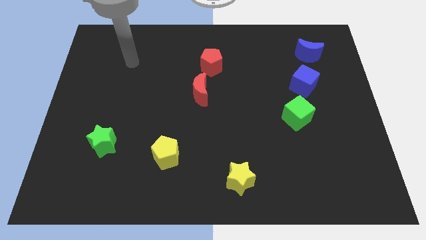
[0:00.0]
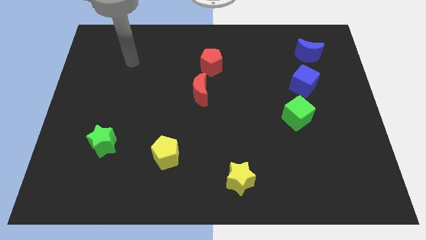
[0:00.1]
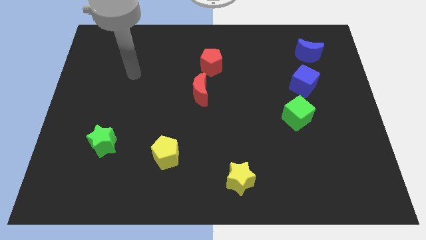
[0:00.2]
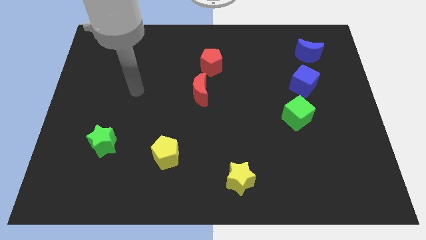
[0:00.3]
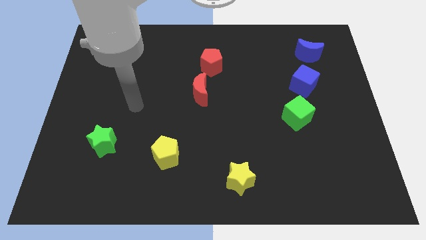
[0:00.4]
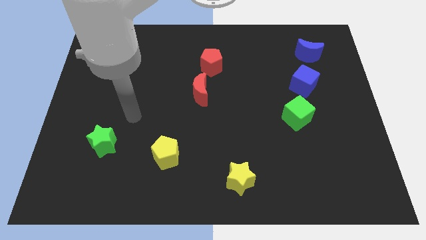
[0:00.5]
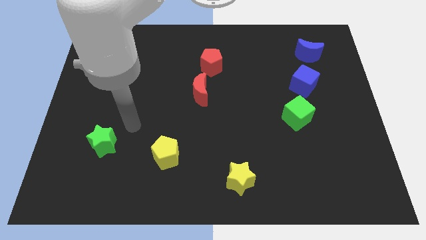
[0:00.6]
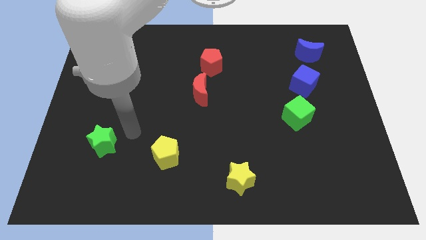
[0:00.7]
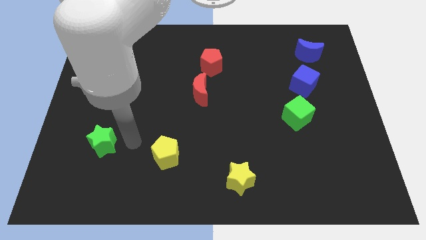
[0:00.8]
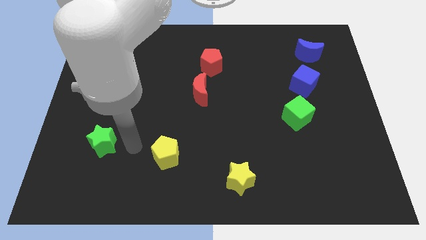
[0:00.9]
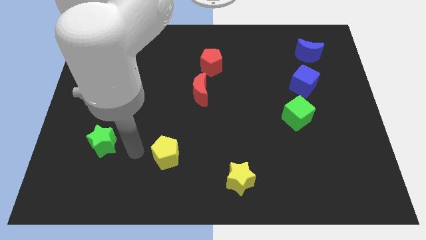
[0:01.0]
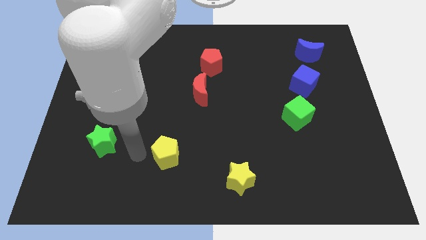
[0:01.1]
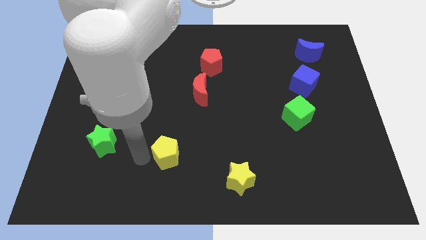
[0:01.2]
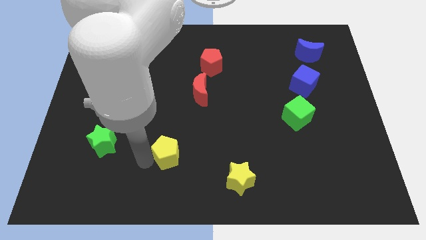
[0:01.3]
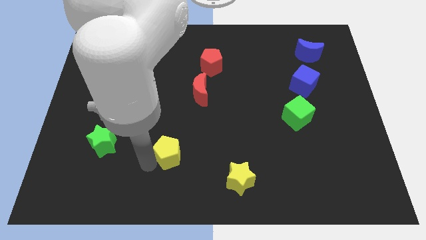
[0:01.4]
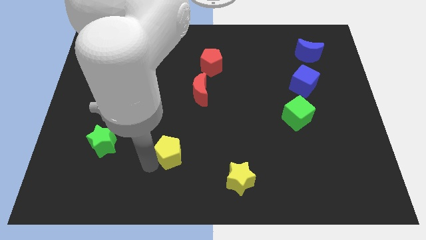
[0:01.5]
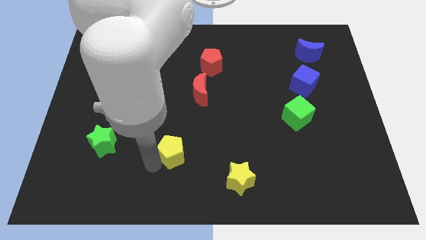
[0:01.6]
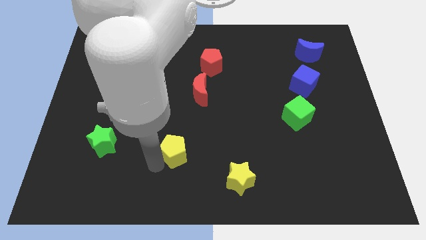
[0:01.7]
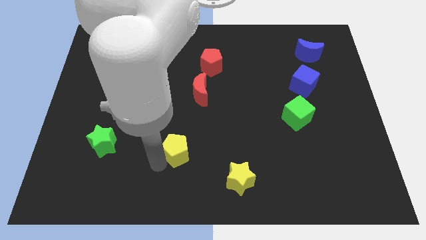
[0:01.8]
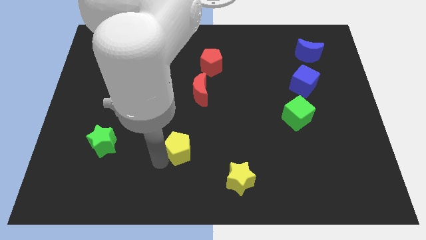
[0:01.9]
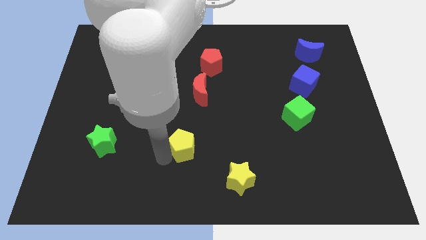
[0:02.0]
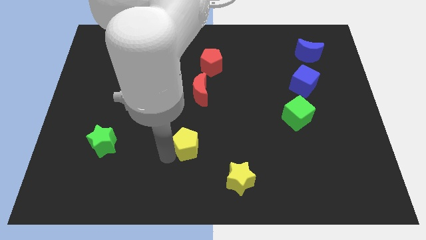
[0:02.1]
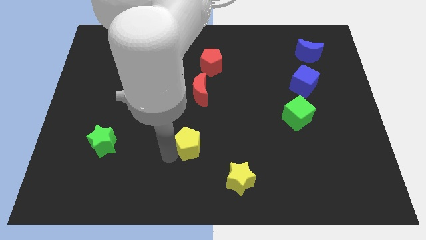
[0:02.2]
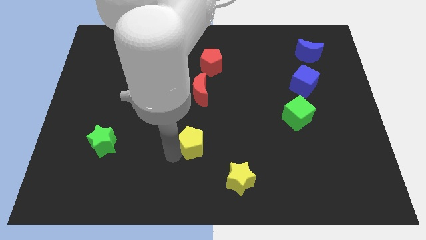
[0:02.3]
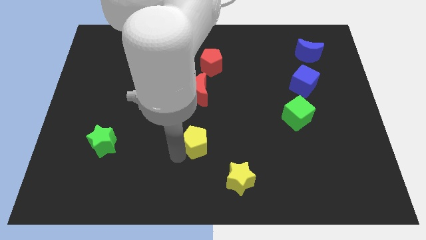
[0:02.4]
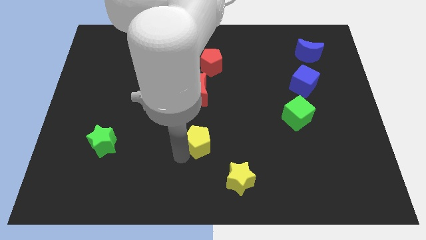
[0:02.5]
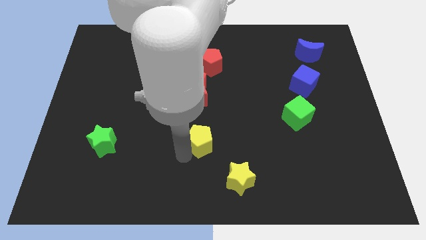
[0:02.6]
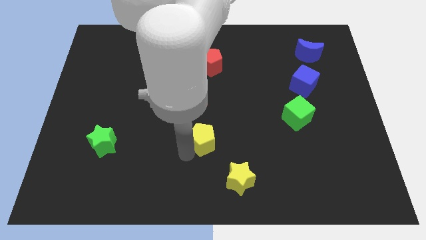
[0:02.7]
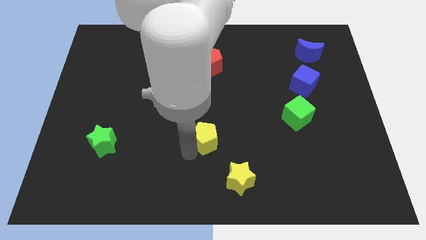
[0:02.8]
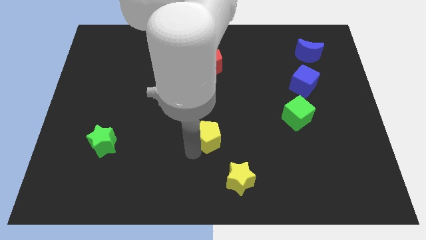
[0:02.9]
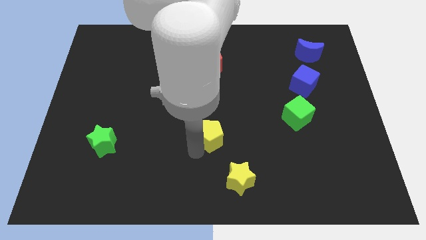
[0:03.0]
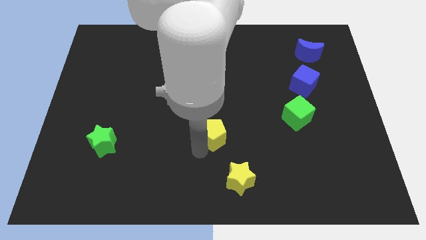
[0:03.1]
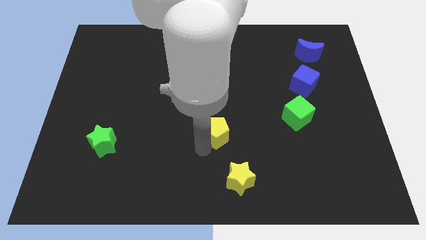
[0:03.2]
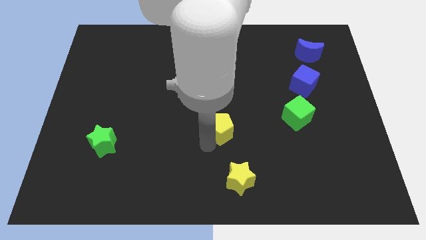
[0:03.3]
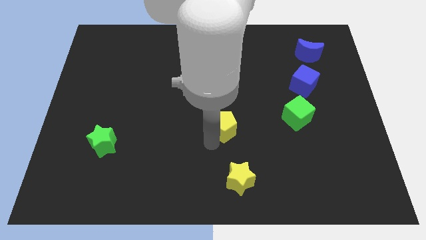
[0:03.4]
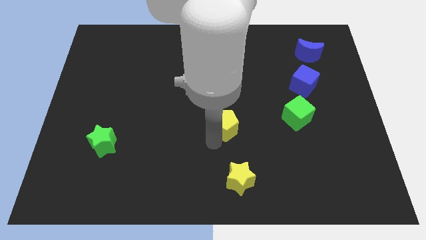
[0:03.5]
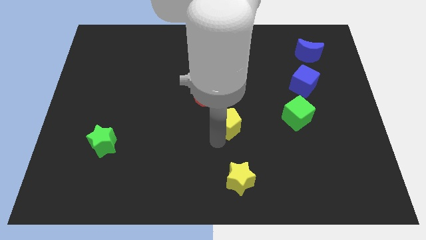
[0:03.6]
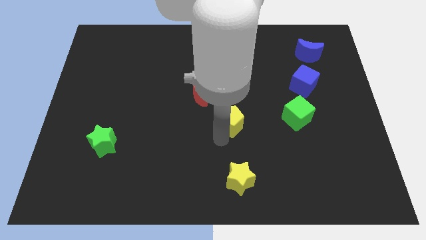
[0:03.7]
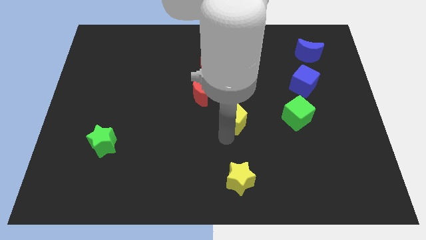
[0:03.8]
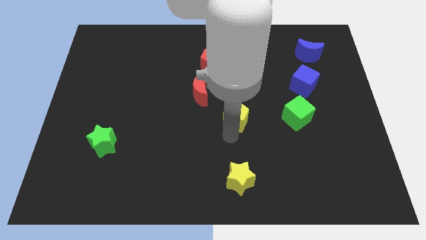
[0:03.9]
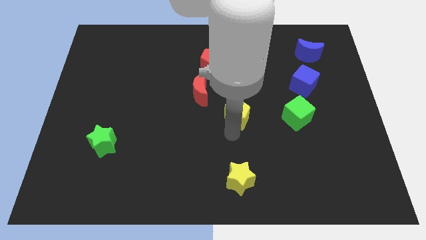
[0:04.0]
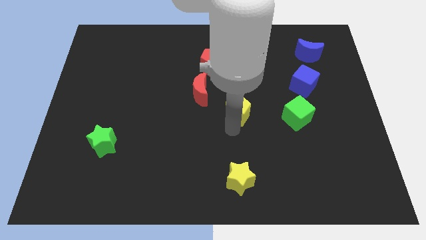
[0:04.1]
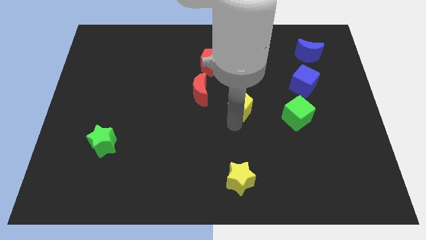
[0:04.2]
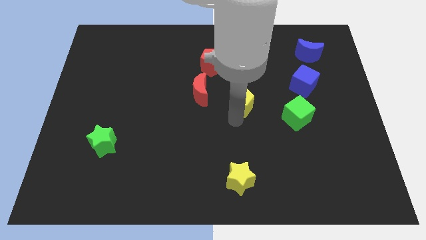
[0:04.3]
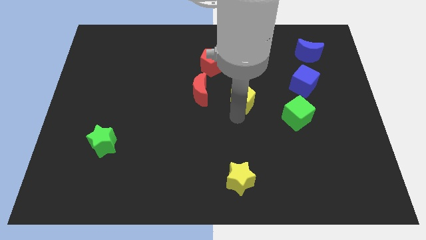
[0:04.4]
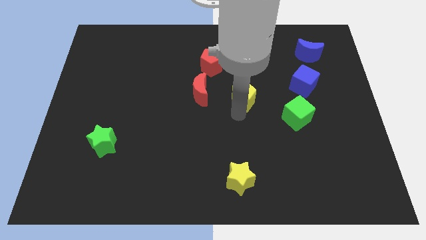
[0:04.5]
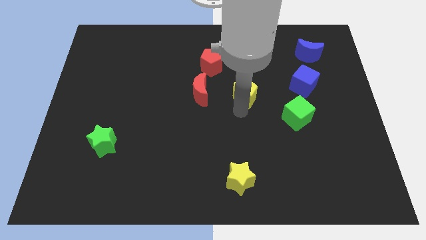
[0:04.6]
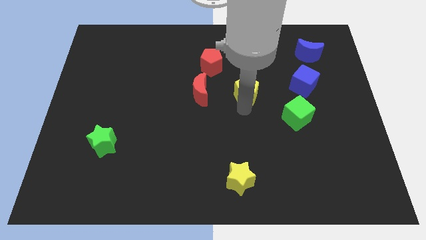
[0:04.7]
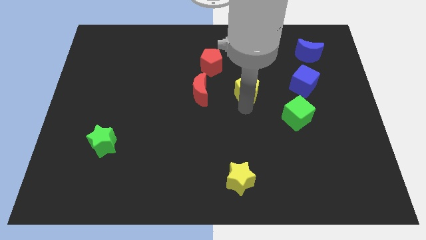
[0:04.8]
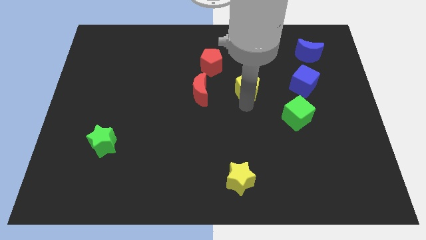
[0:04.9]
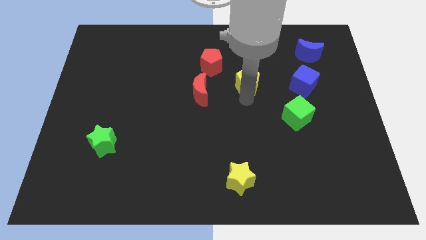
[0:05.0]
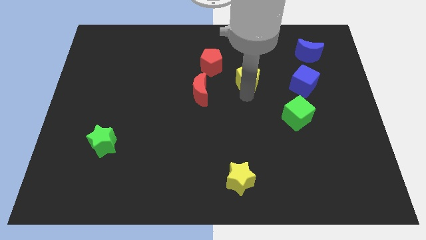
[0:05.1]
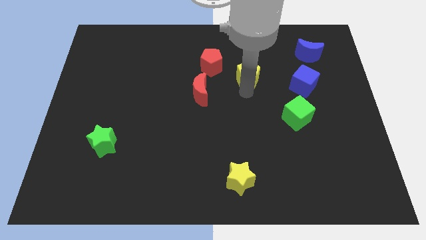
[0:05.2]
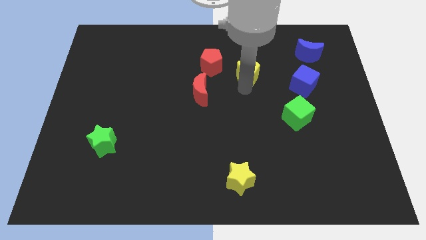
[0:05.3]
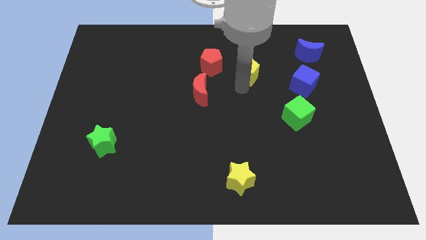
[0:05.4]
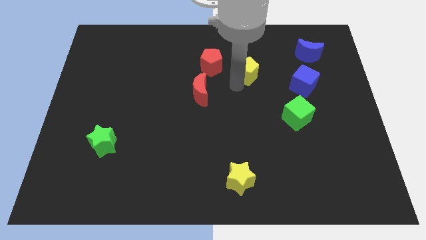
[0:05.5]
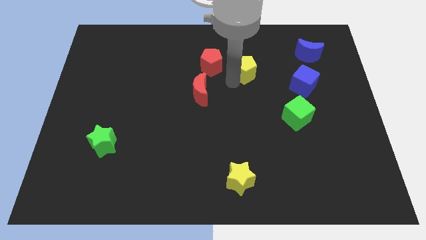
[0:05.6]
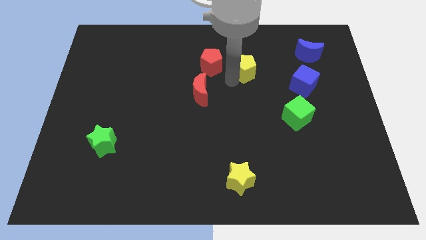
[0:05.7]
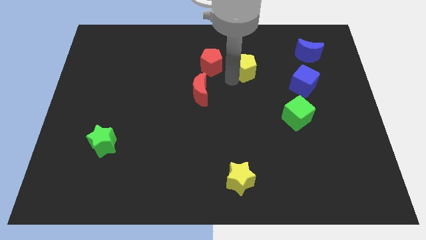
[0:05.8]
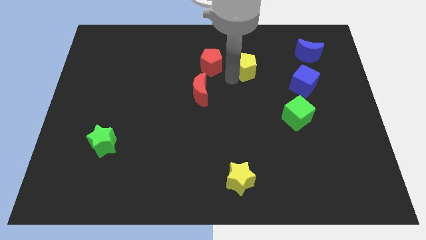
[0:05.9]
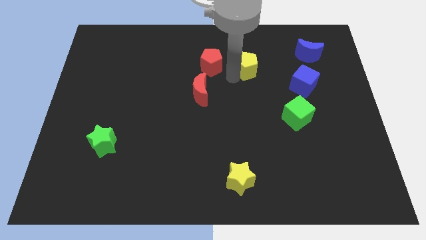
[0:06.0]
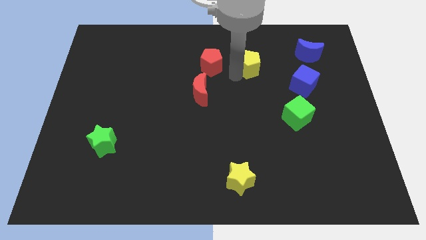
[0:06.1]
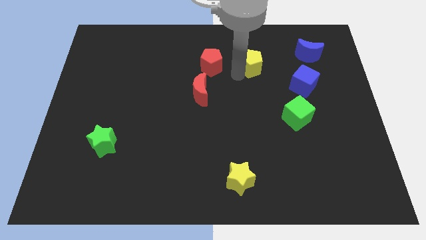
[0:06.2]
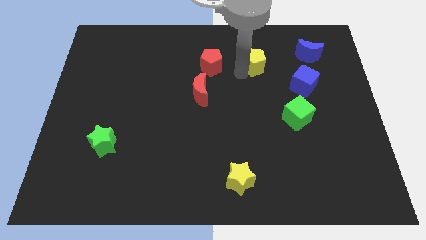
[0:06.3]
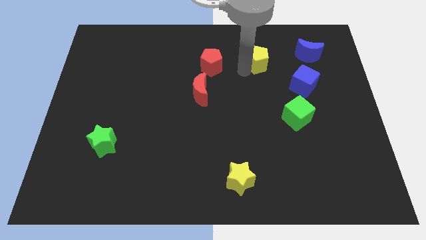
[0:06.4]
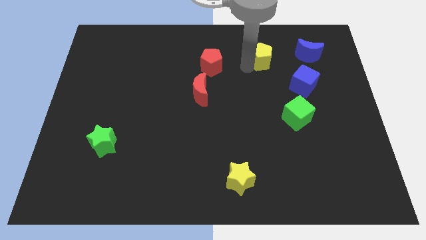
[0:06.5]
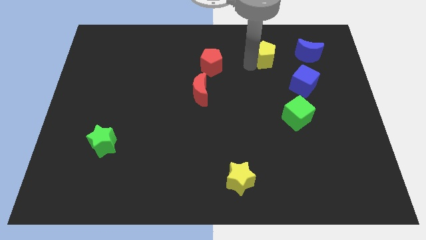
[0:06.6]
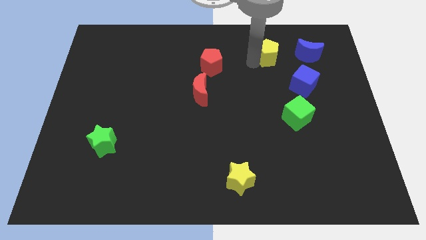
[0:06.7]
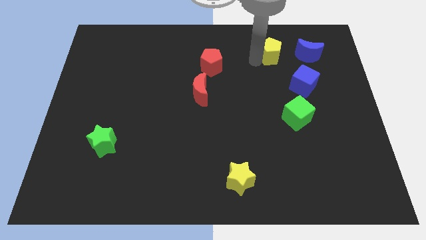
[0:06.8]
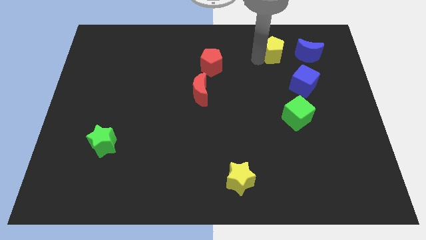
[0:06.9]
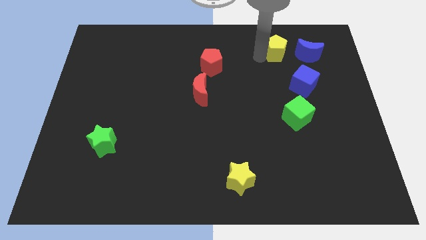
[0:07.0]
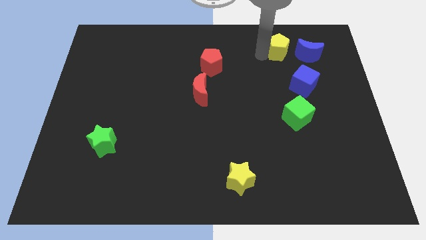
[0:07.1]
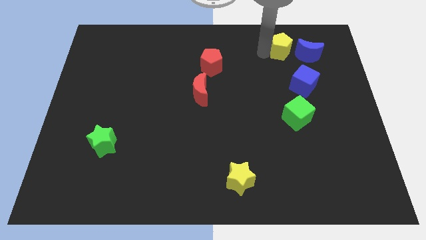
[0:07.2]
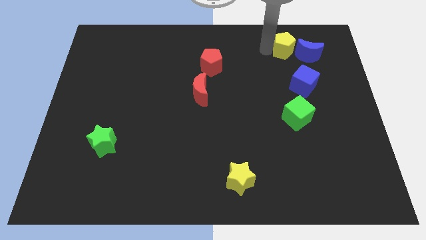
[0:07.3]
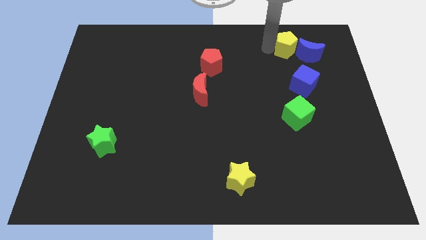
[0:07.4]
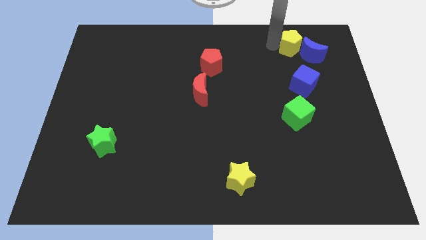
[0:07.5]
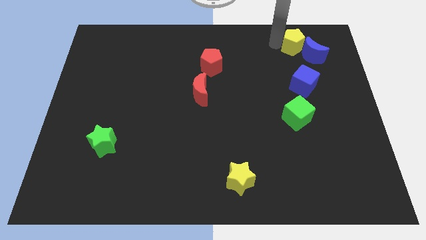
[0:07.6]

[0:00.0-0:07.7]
move the yellow pentagon towards the blue moon

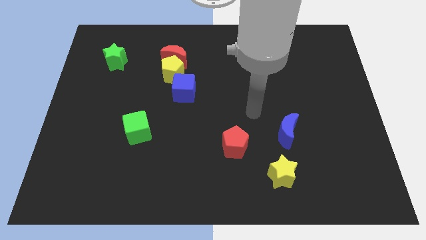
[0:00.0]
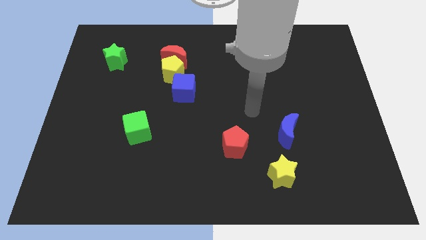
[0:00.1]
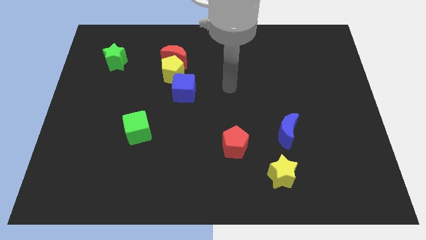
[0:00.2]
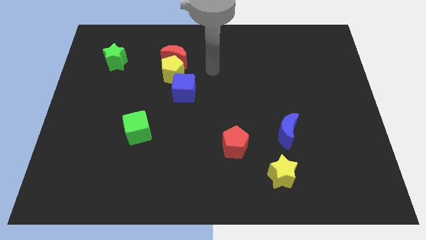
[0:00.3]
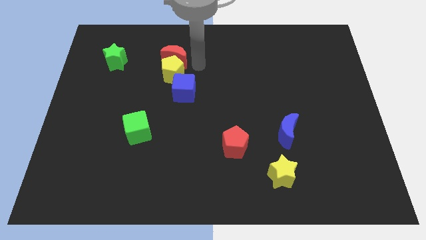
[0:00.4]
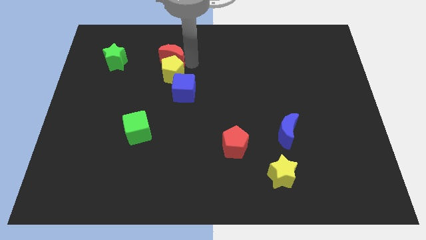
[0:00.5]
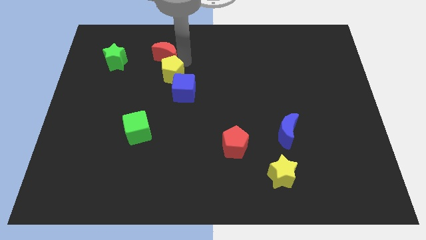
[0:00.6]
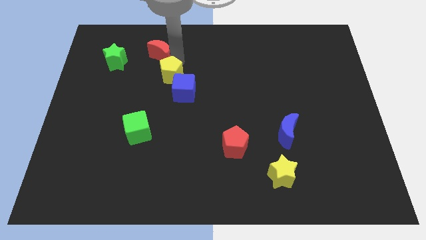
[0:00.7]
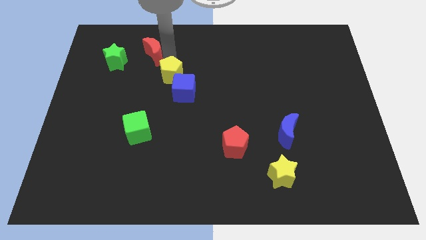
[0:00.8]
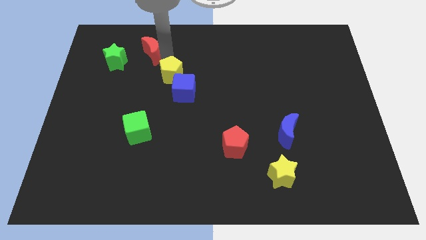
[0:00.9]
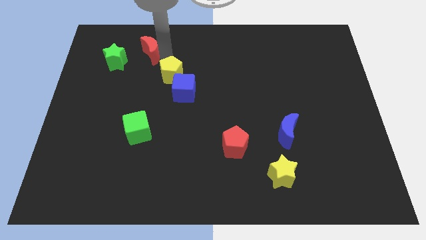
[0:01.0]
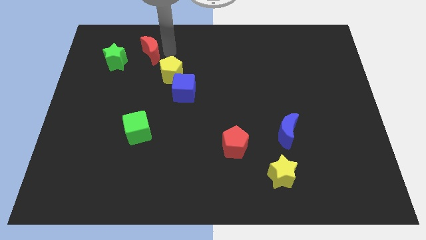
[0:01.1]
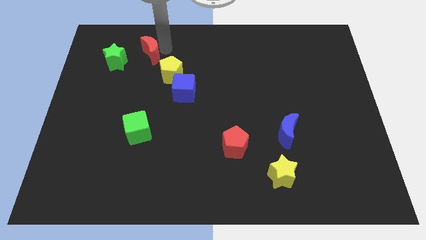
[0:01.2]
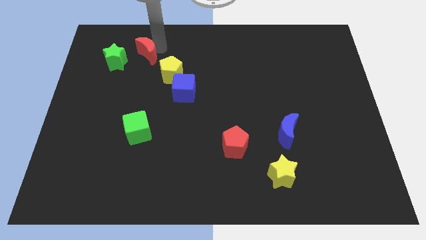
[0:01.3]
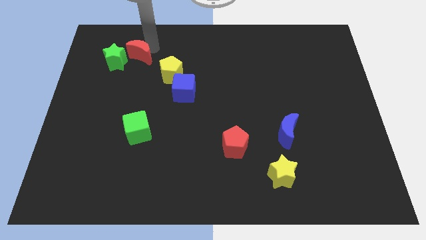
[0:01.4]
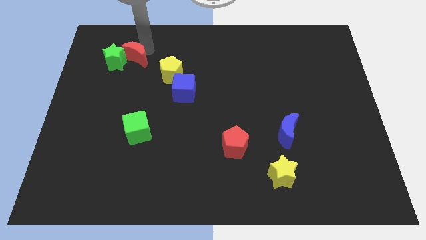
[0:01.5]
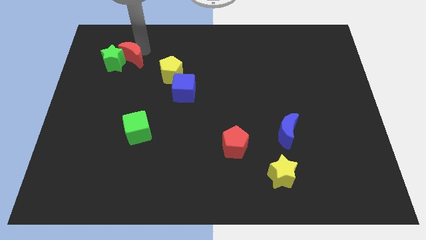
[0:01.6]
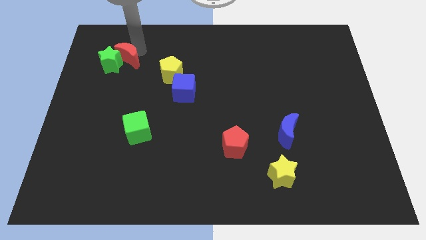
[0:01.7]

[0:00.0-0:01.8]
put the red moon next to the green star
